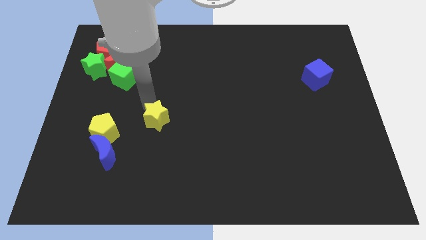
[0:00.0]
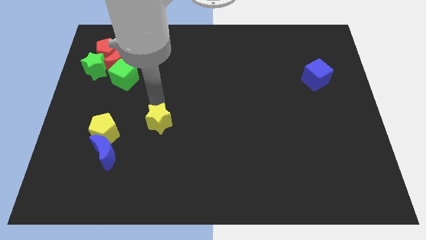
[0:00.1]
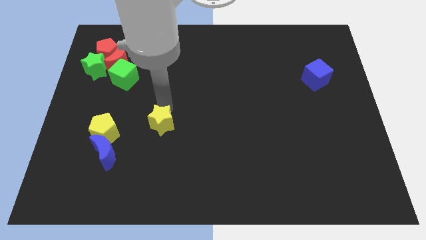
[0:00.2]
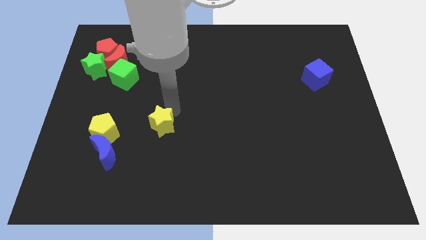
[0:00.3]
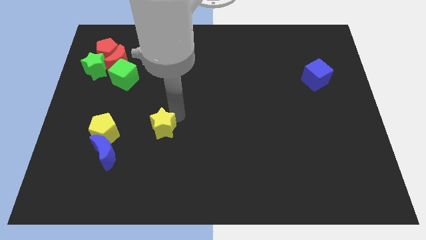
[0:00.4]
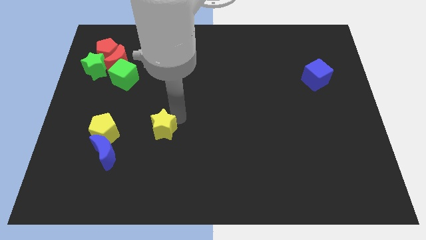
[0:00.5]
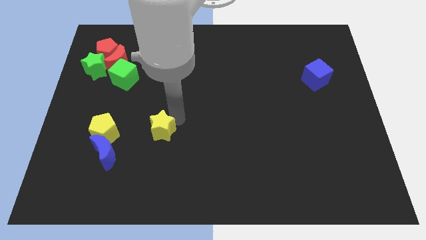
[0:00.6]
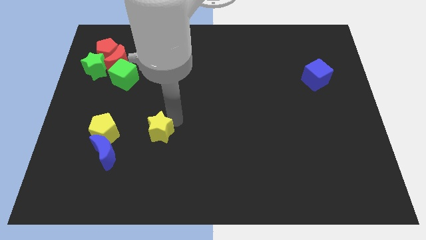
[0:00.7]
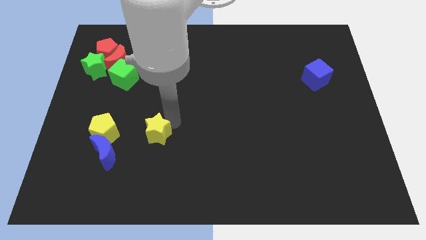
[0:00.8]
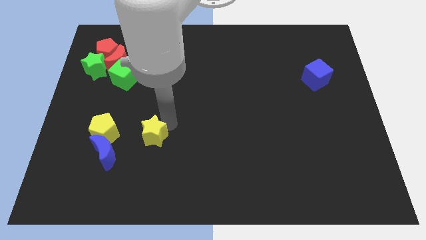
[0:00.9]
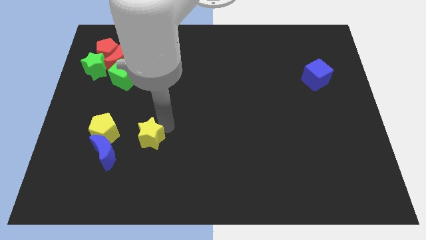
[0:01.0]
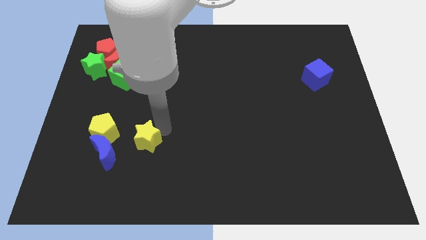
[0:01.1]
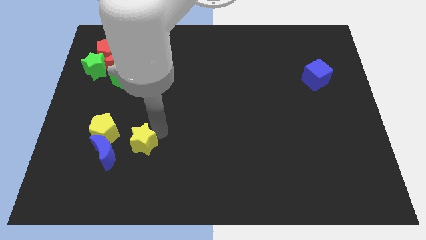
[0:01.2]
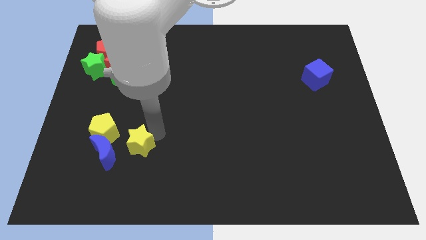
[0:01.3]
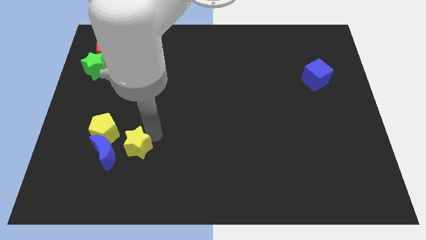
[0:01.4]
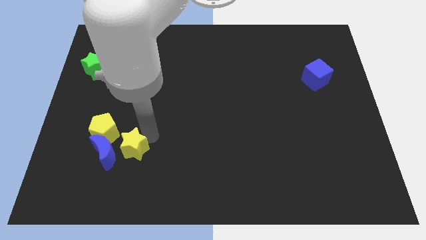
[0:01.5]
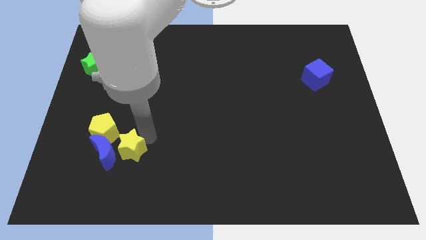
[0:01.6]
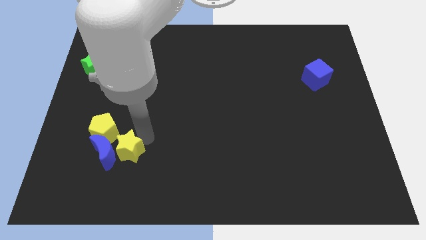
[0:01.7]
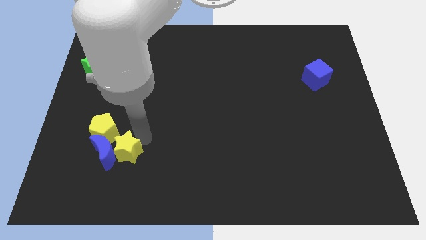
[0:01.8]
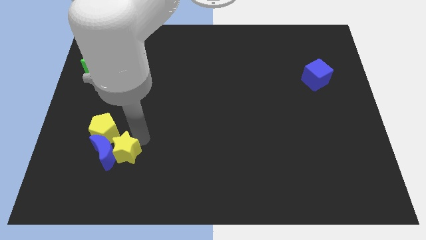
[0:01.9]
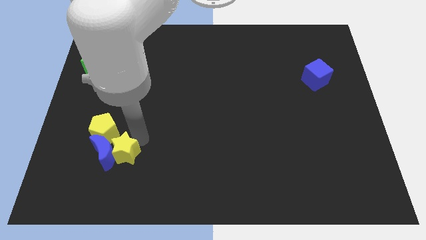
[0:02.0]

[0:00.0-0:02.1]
slide the yellow star into the right side of the blue moon

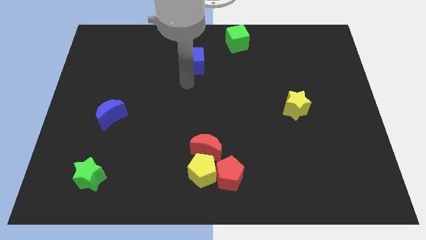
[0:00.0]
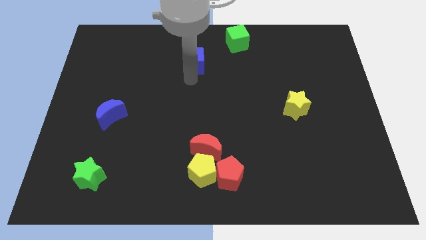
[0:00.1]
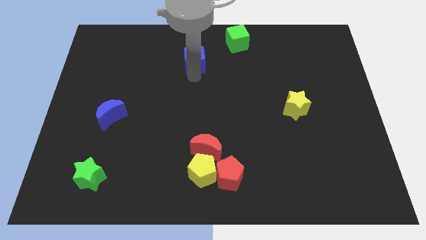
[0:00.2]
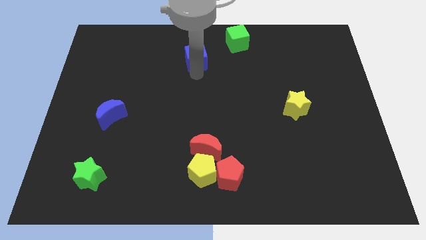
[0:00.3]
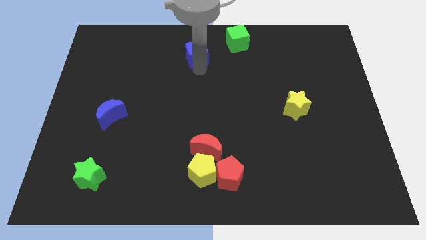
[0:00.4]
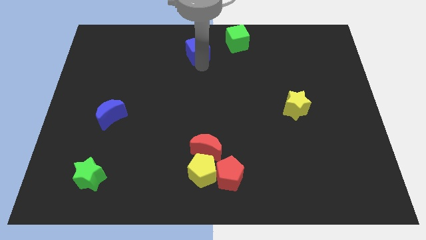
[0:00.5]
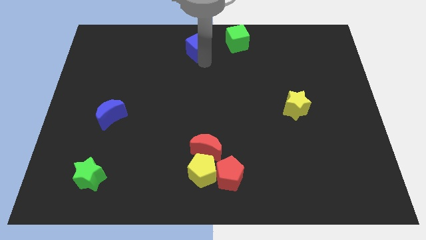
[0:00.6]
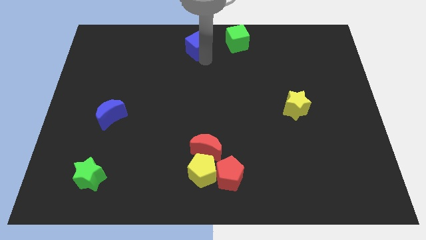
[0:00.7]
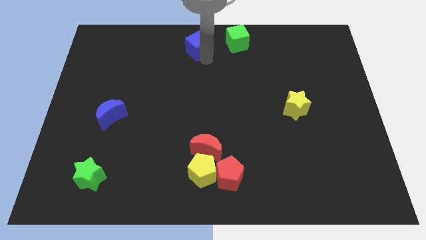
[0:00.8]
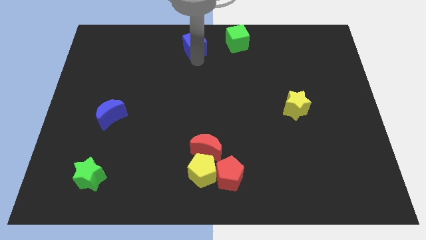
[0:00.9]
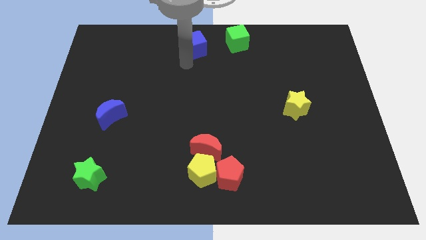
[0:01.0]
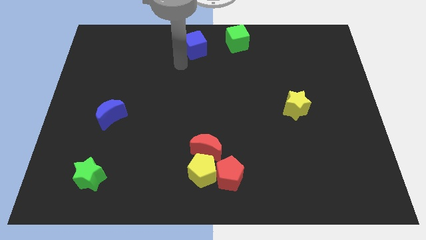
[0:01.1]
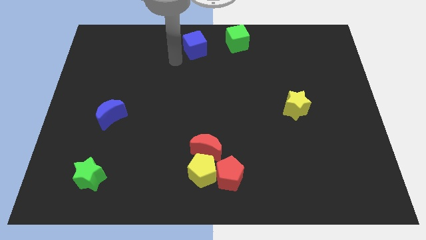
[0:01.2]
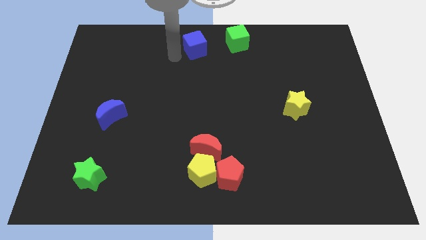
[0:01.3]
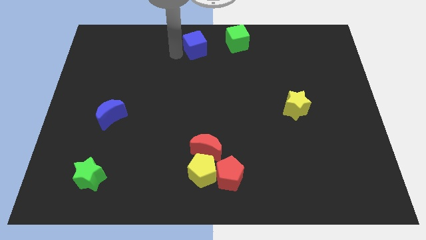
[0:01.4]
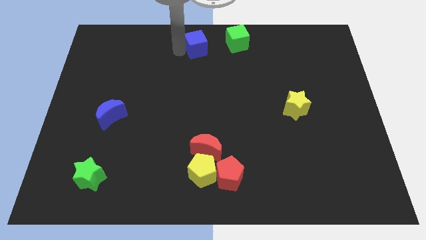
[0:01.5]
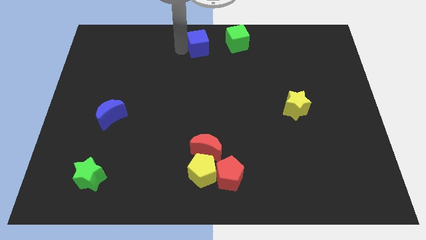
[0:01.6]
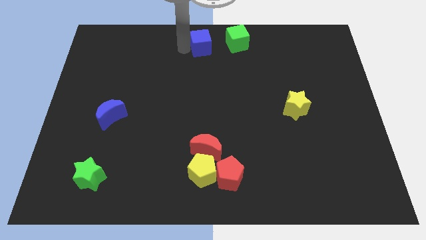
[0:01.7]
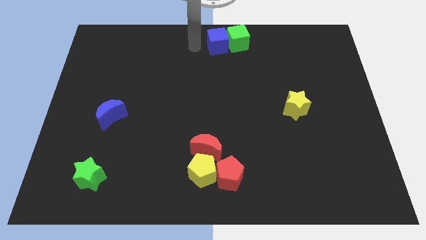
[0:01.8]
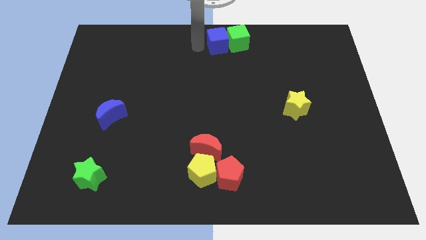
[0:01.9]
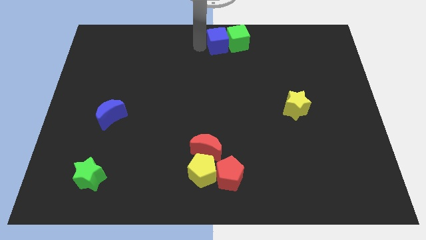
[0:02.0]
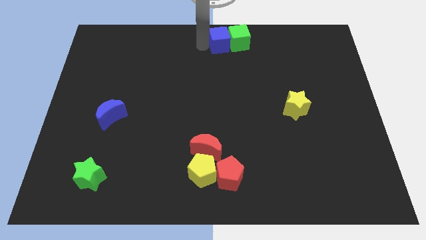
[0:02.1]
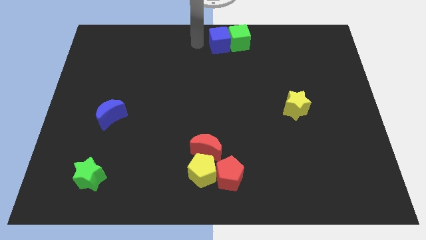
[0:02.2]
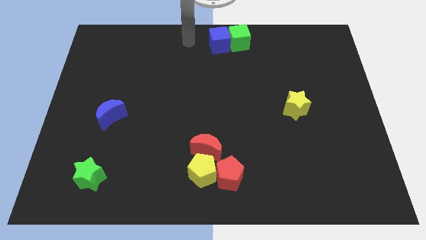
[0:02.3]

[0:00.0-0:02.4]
push the blue cube into green cube

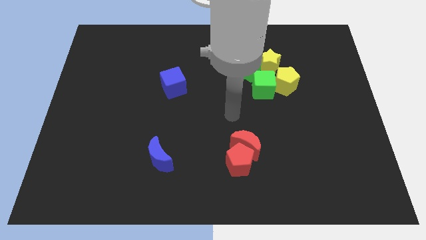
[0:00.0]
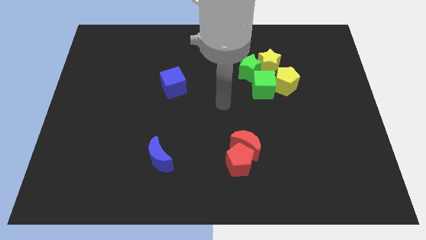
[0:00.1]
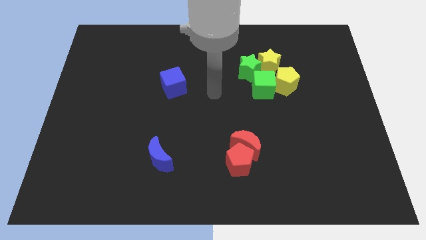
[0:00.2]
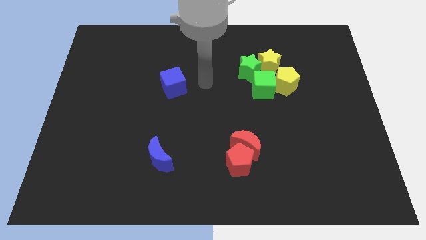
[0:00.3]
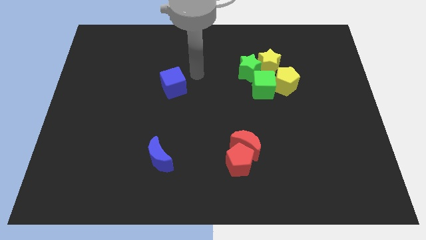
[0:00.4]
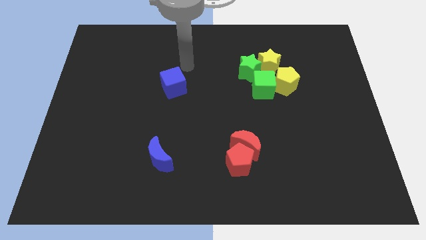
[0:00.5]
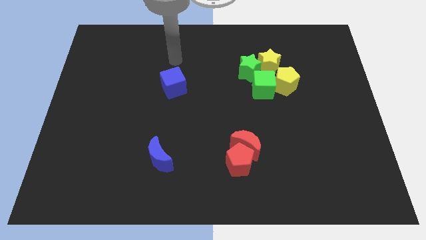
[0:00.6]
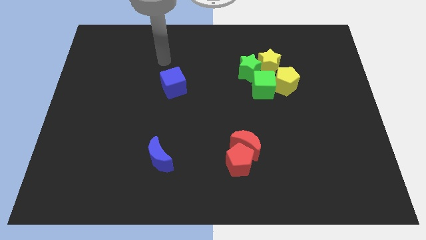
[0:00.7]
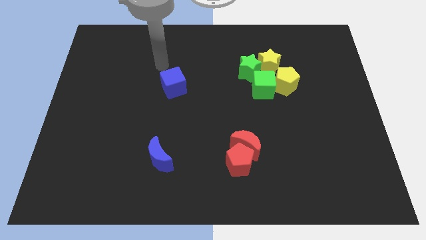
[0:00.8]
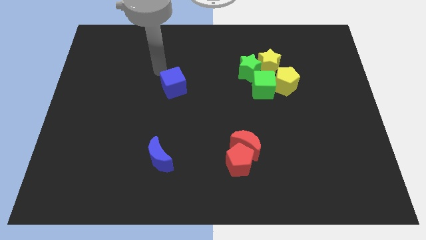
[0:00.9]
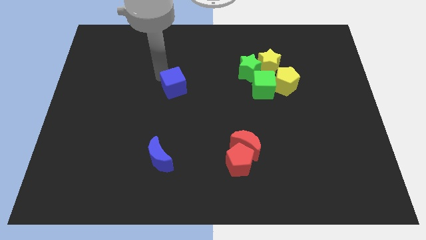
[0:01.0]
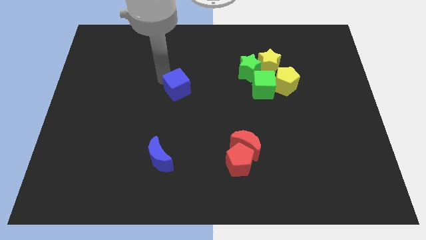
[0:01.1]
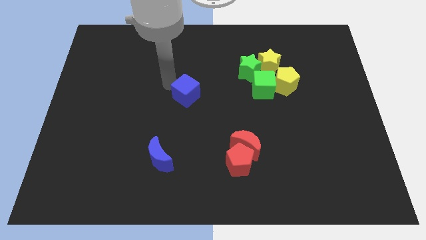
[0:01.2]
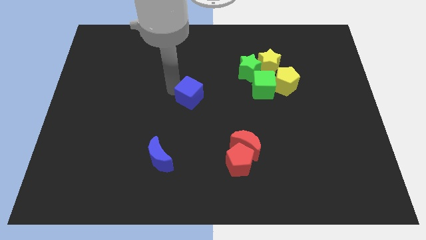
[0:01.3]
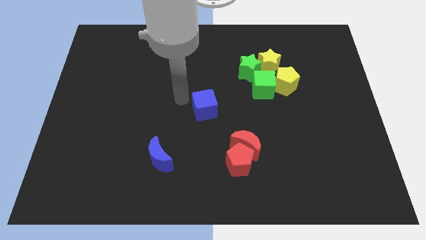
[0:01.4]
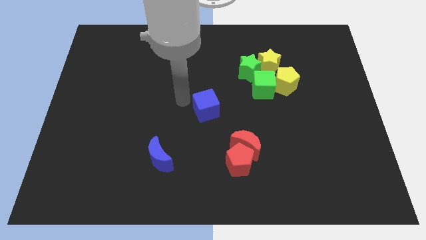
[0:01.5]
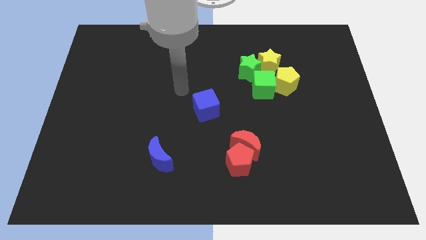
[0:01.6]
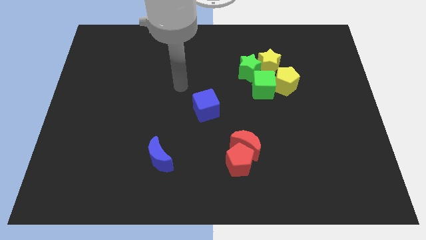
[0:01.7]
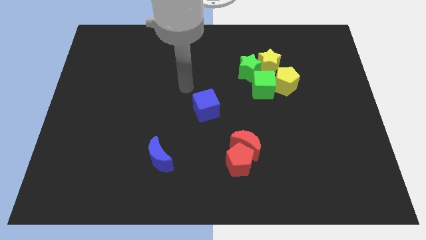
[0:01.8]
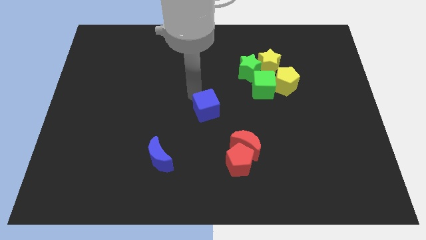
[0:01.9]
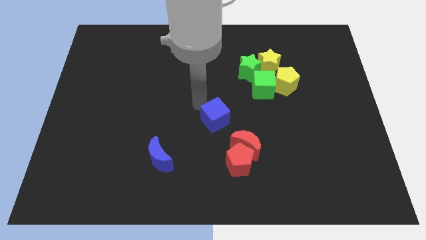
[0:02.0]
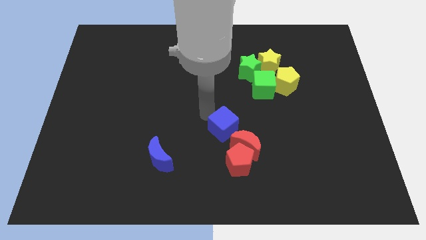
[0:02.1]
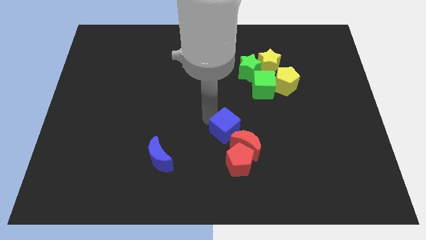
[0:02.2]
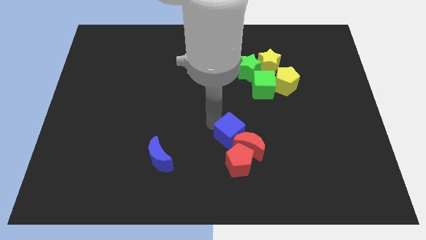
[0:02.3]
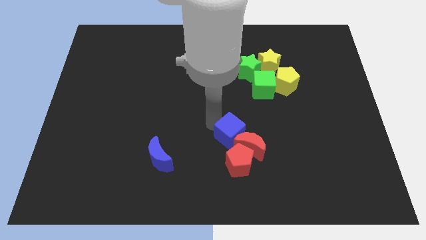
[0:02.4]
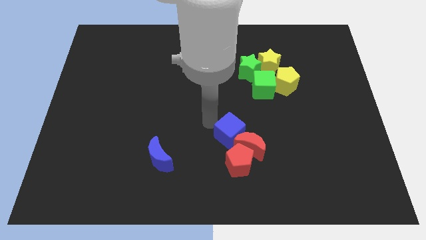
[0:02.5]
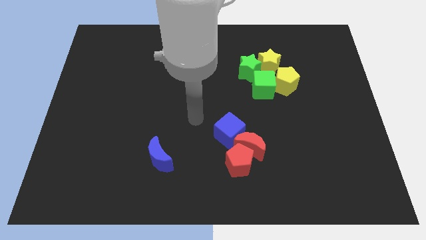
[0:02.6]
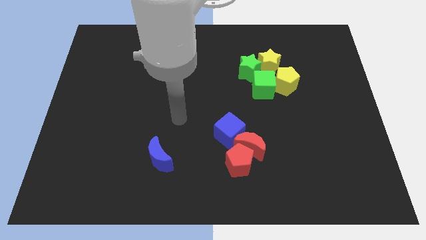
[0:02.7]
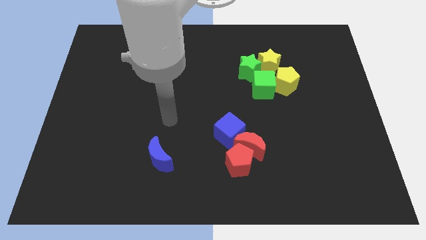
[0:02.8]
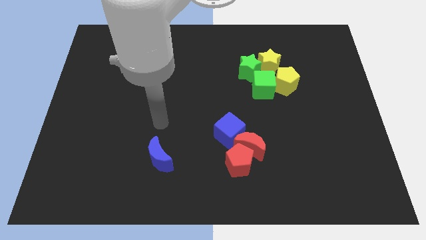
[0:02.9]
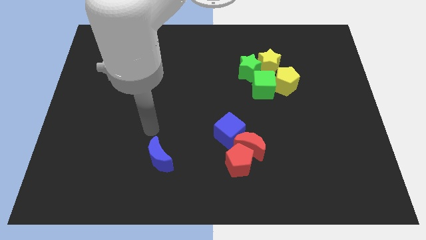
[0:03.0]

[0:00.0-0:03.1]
push the blue cube into the red moon

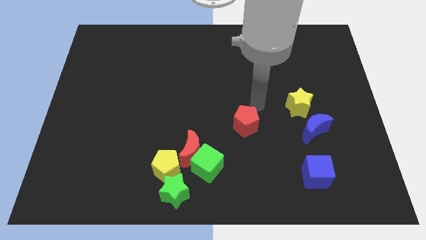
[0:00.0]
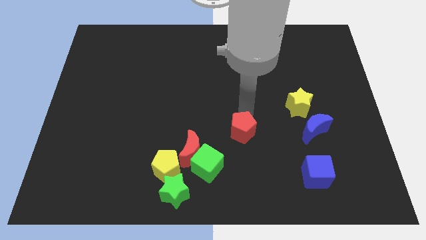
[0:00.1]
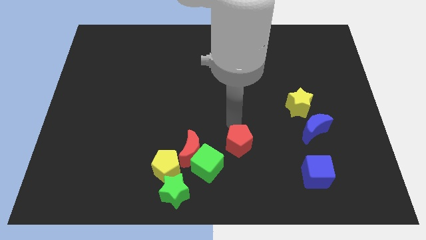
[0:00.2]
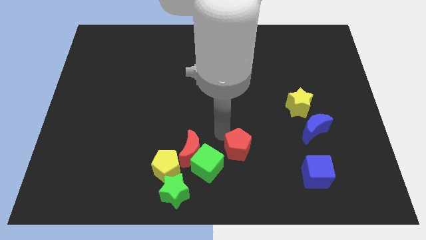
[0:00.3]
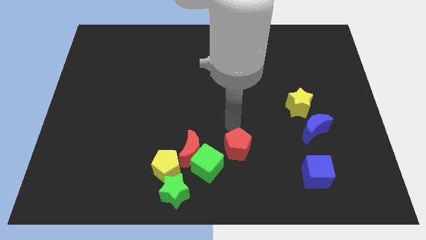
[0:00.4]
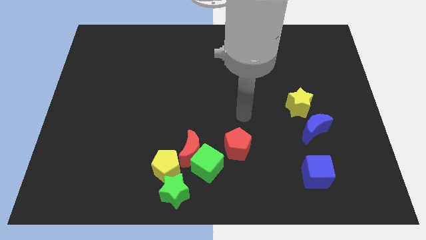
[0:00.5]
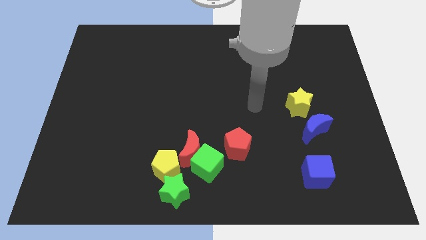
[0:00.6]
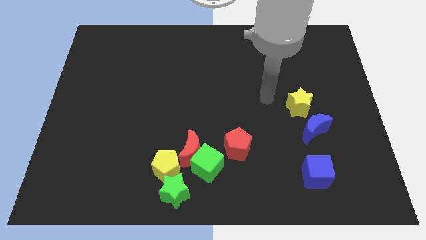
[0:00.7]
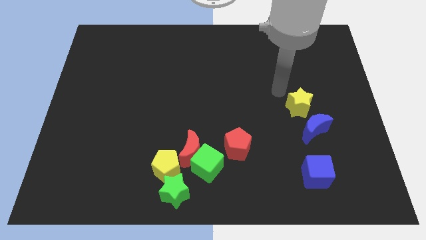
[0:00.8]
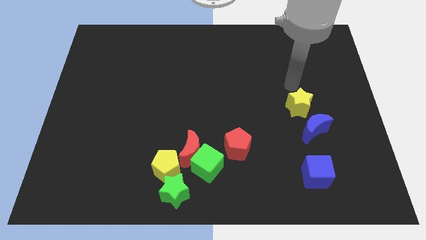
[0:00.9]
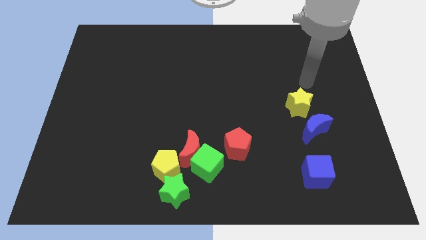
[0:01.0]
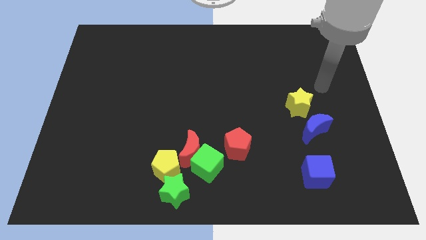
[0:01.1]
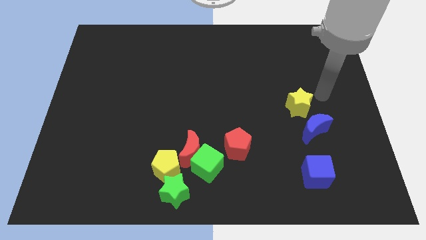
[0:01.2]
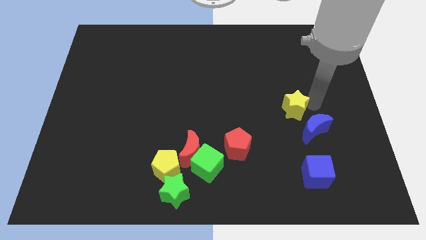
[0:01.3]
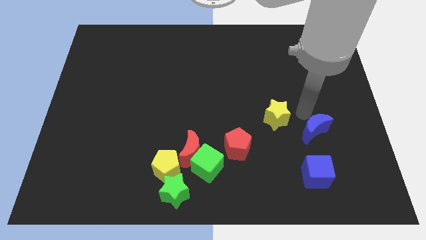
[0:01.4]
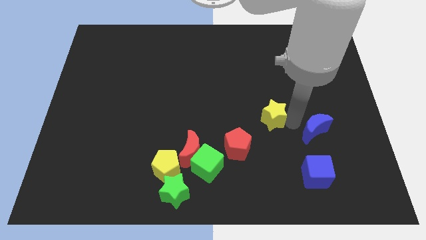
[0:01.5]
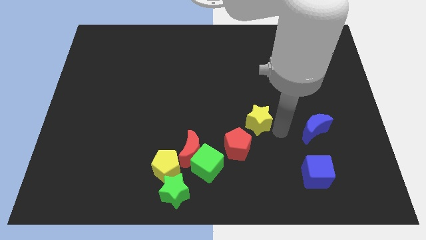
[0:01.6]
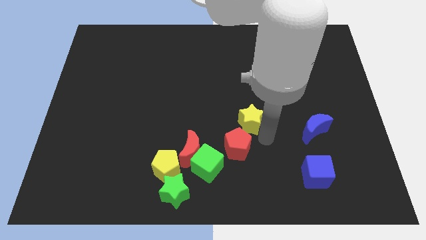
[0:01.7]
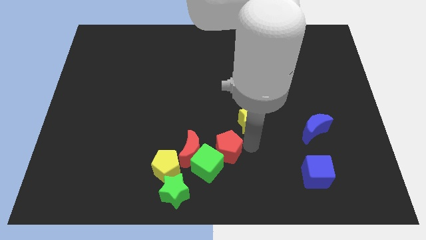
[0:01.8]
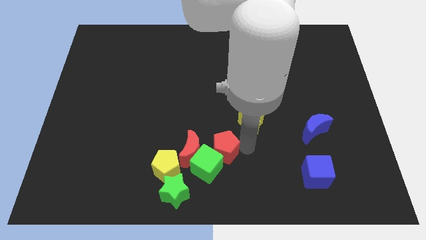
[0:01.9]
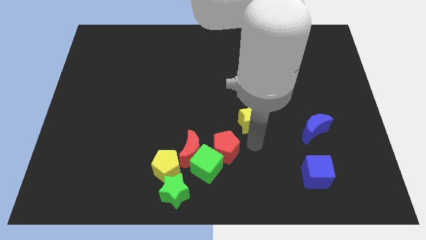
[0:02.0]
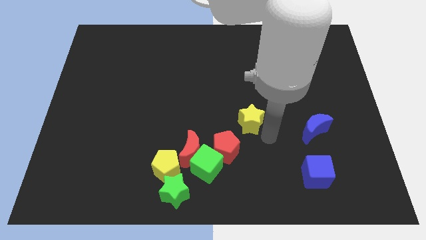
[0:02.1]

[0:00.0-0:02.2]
drag the yellow star and red pentagon towards the group of blocks
